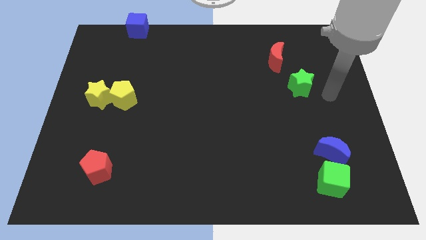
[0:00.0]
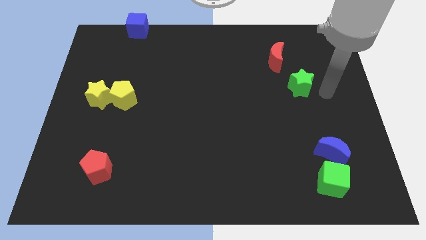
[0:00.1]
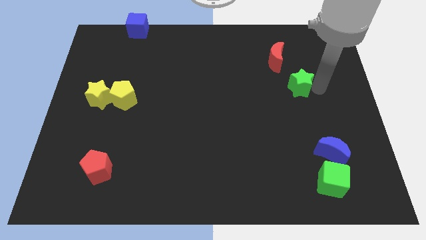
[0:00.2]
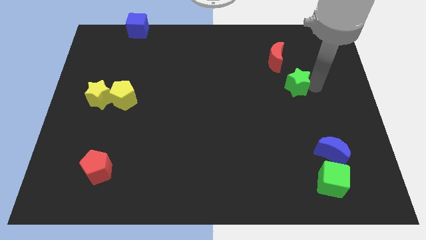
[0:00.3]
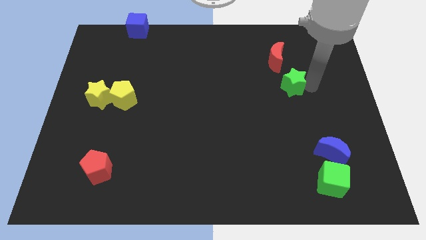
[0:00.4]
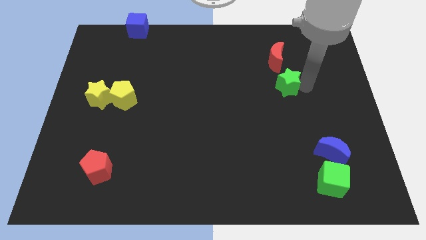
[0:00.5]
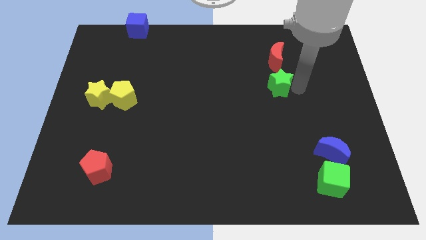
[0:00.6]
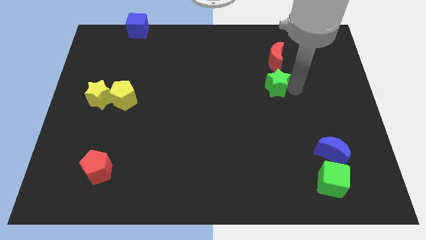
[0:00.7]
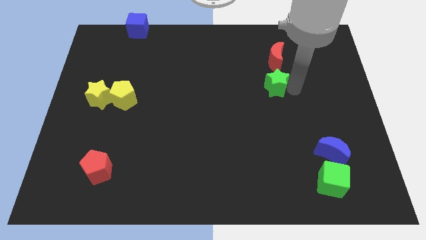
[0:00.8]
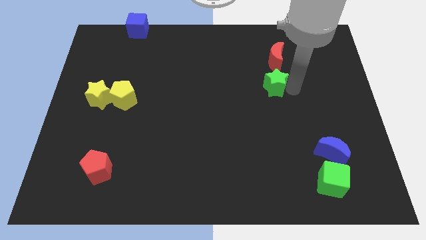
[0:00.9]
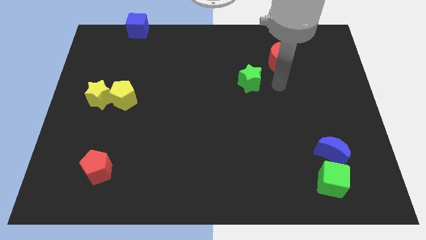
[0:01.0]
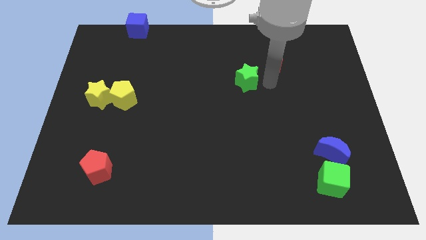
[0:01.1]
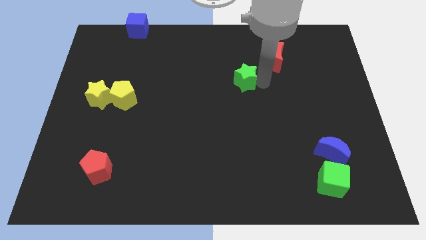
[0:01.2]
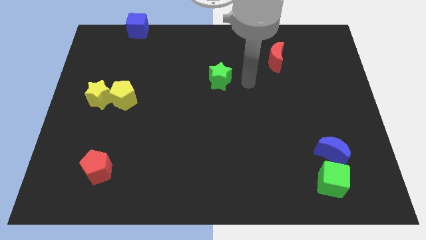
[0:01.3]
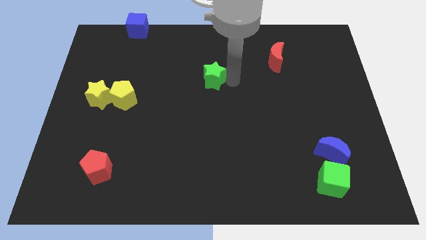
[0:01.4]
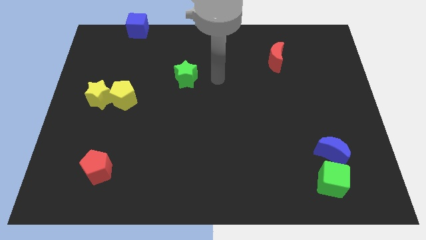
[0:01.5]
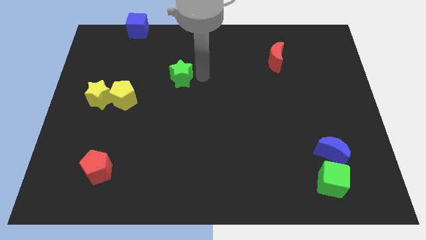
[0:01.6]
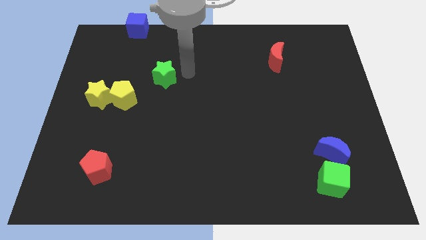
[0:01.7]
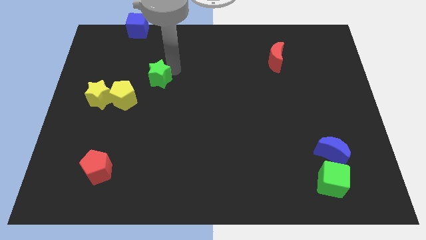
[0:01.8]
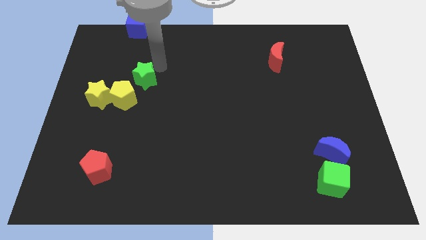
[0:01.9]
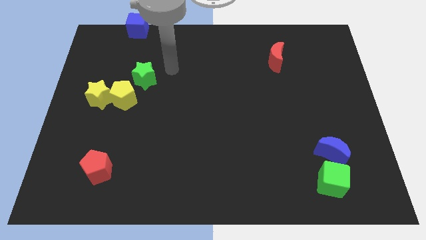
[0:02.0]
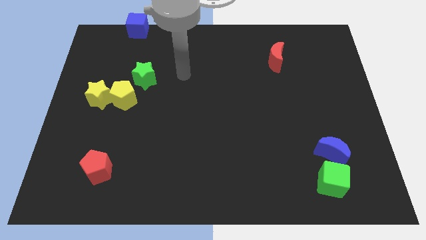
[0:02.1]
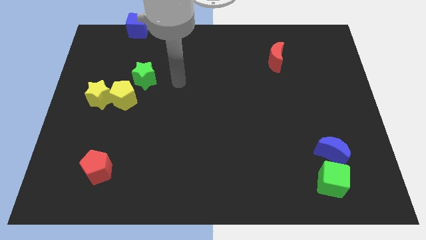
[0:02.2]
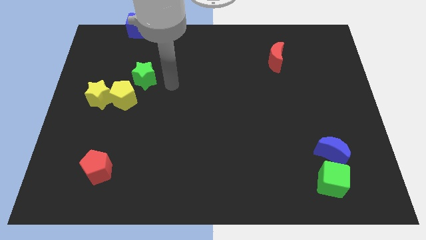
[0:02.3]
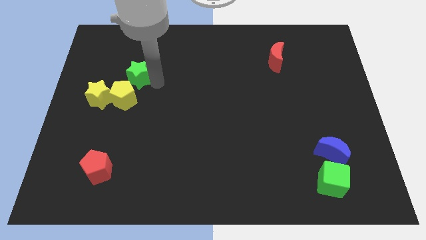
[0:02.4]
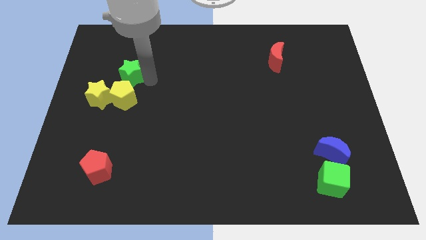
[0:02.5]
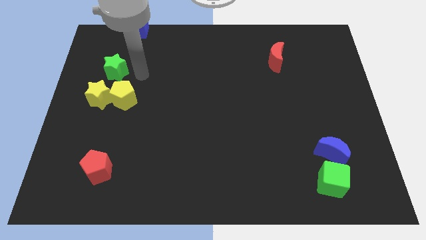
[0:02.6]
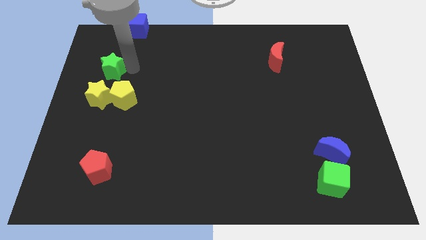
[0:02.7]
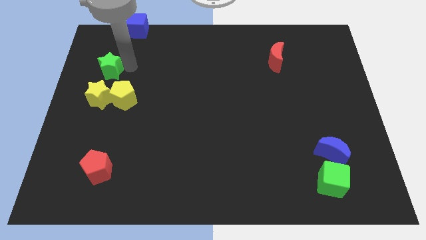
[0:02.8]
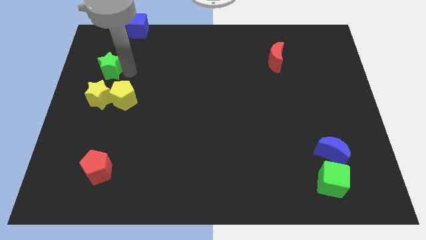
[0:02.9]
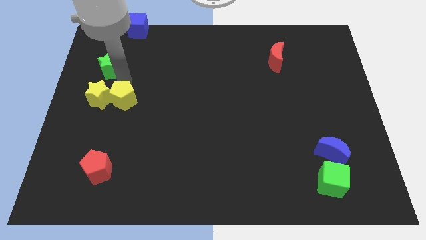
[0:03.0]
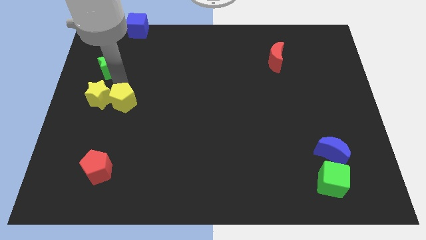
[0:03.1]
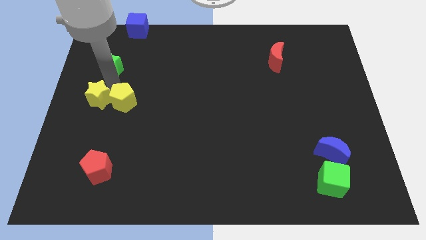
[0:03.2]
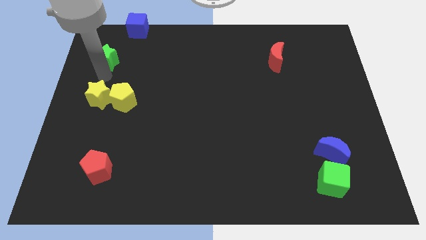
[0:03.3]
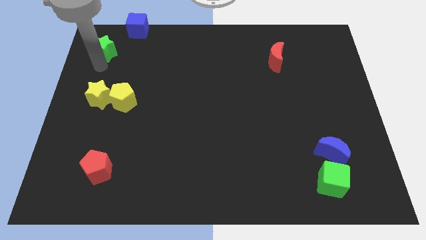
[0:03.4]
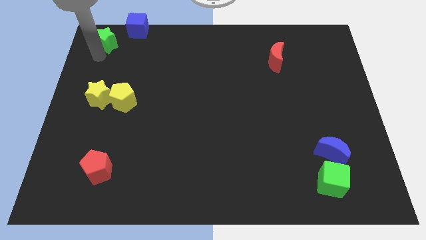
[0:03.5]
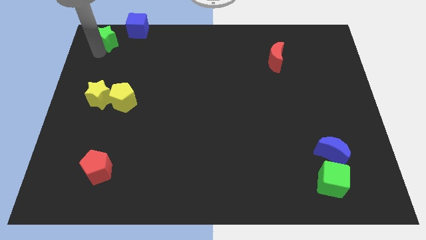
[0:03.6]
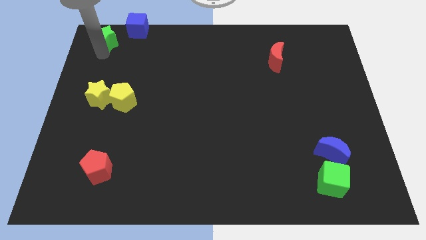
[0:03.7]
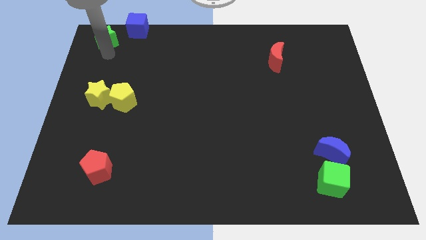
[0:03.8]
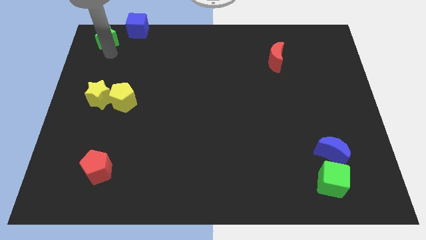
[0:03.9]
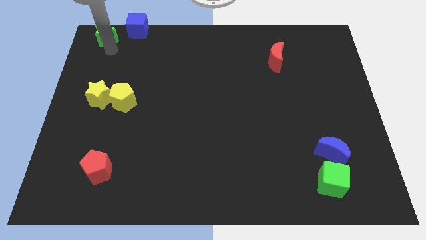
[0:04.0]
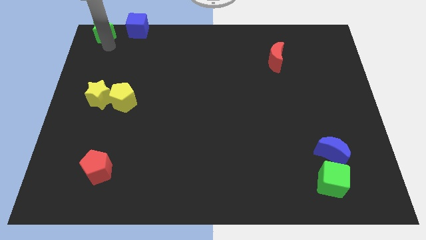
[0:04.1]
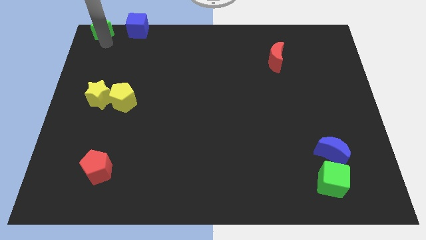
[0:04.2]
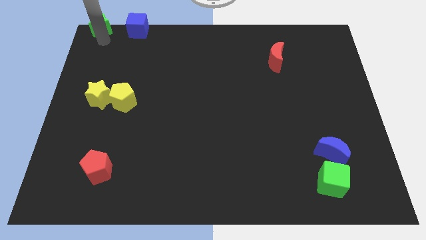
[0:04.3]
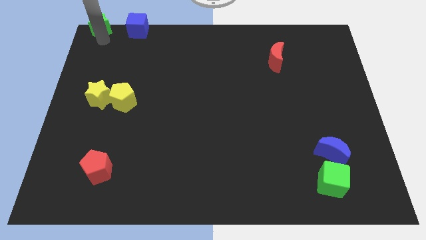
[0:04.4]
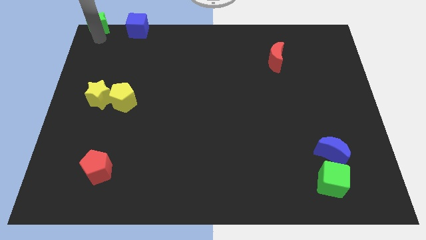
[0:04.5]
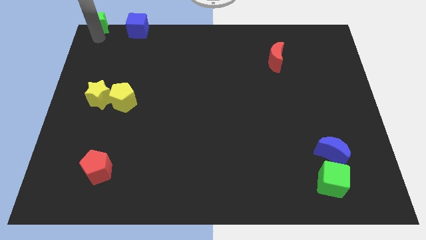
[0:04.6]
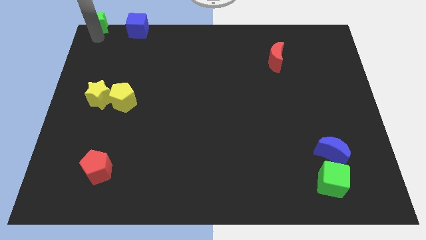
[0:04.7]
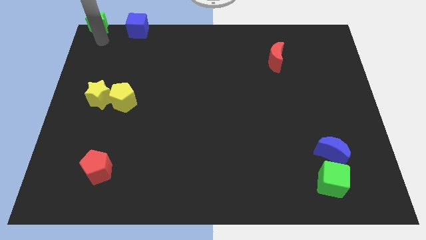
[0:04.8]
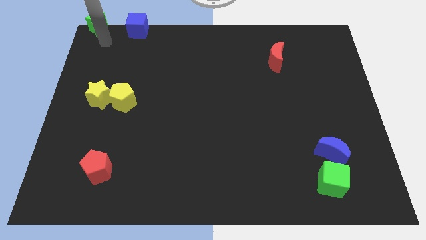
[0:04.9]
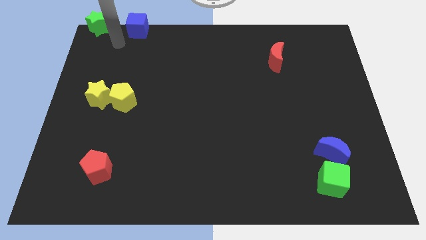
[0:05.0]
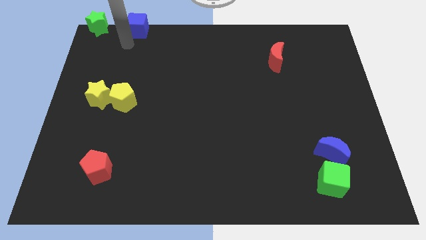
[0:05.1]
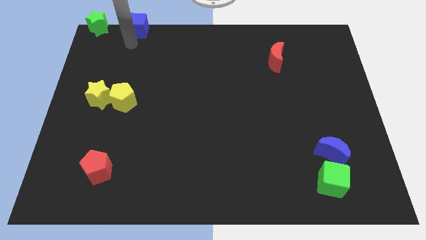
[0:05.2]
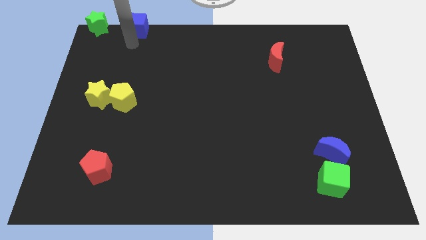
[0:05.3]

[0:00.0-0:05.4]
move the green star left to the blue cube

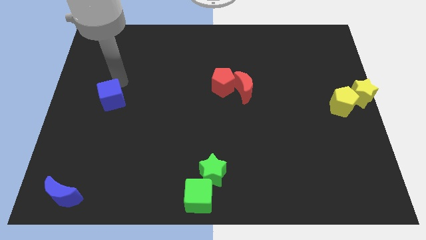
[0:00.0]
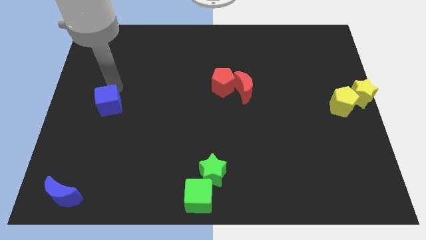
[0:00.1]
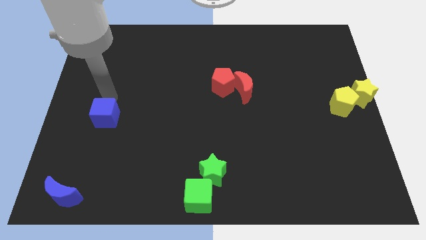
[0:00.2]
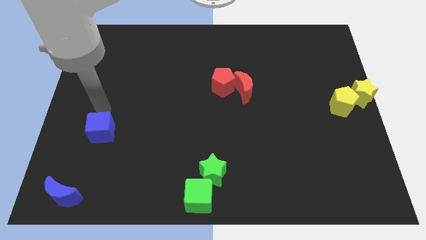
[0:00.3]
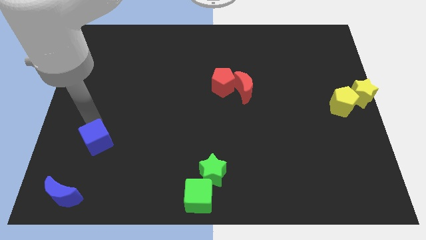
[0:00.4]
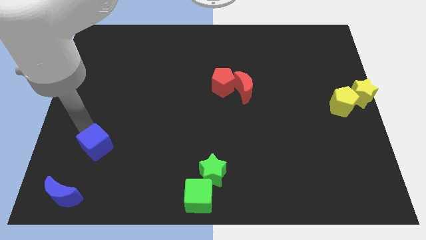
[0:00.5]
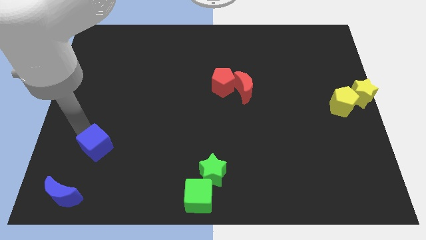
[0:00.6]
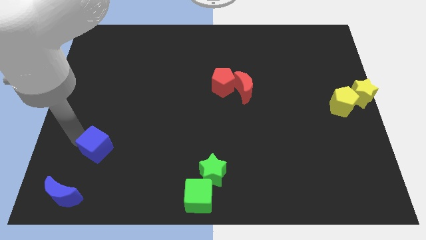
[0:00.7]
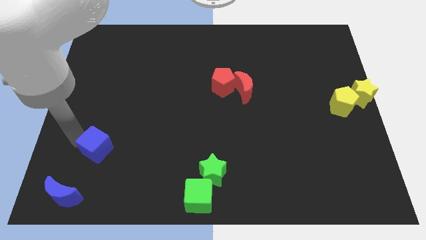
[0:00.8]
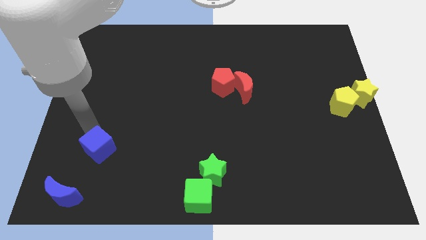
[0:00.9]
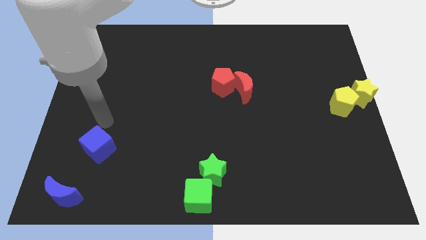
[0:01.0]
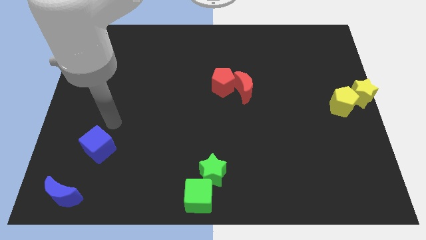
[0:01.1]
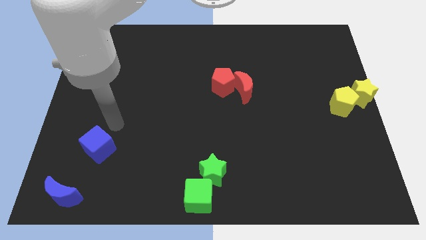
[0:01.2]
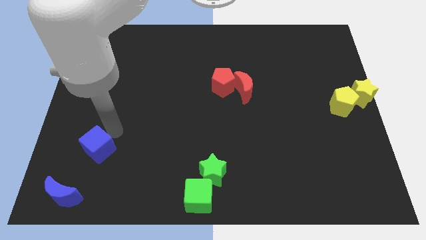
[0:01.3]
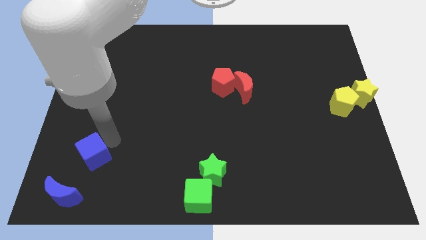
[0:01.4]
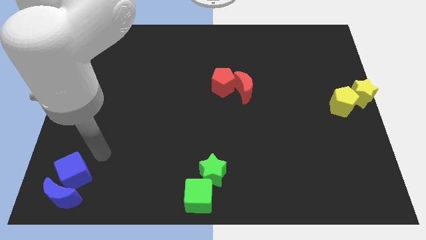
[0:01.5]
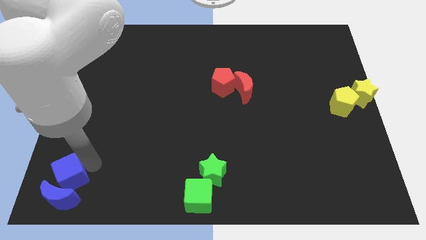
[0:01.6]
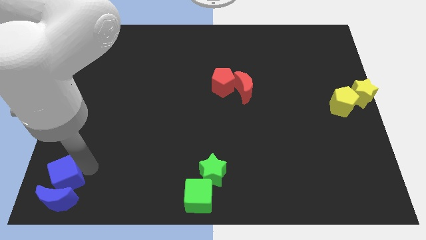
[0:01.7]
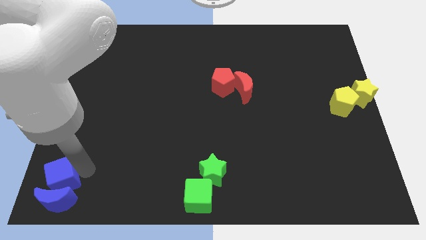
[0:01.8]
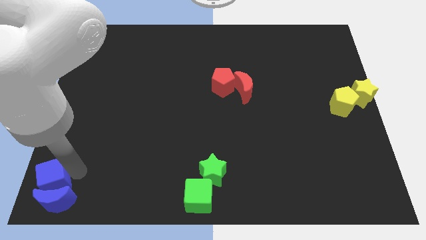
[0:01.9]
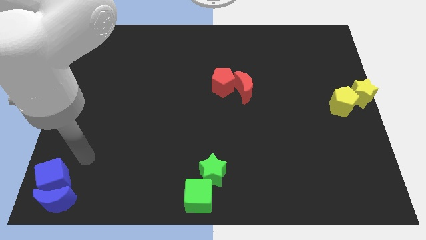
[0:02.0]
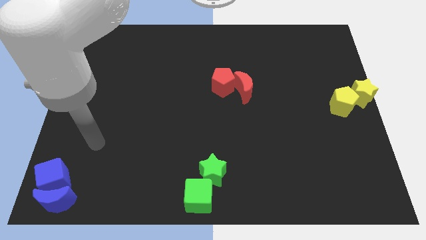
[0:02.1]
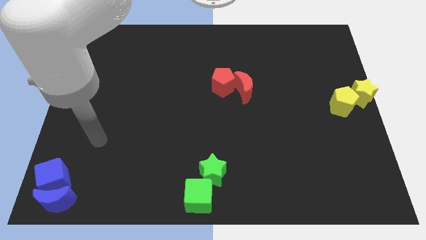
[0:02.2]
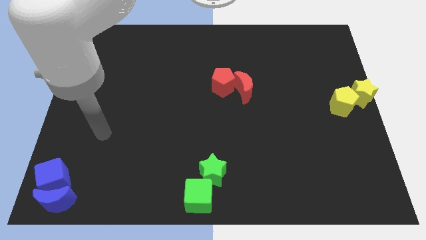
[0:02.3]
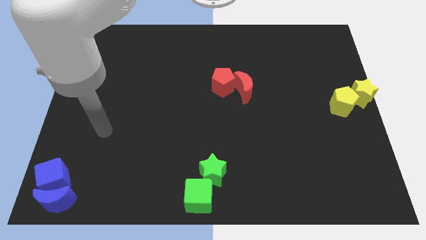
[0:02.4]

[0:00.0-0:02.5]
push the blue cube above the blue moon

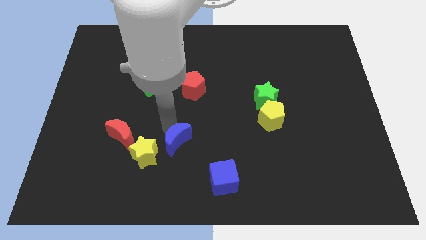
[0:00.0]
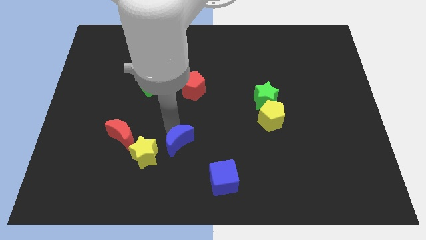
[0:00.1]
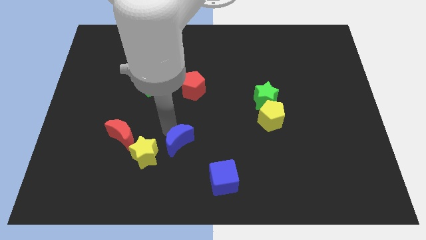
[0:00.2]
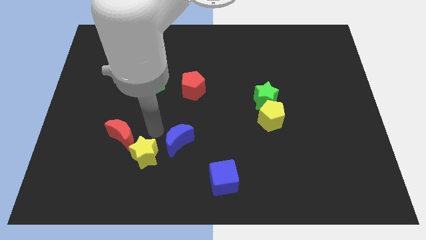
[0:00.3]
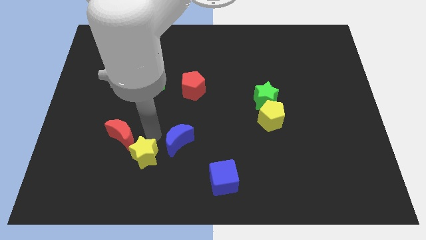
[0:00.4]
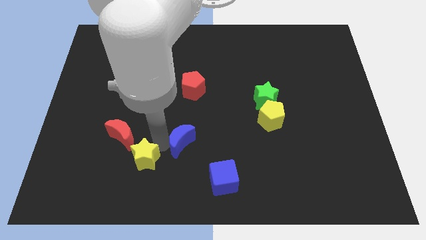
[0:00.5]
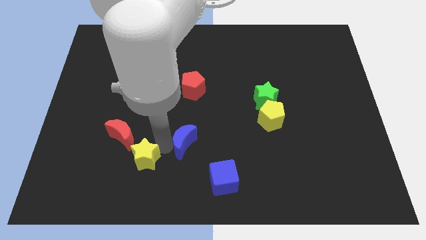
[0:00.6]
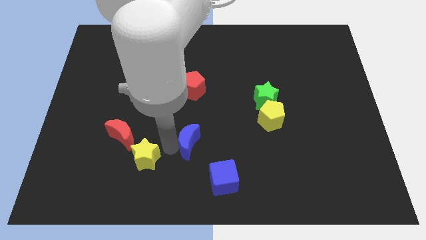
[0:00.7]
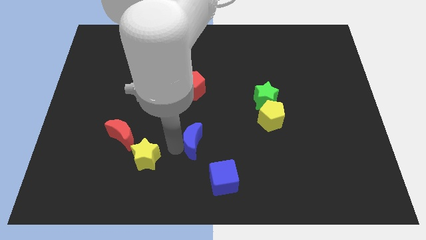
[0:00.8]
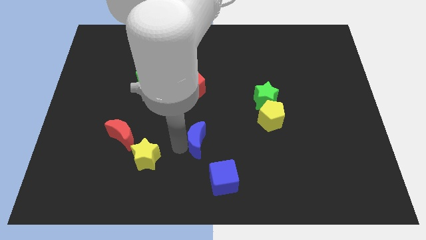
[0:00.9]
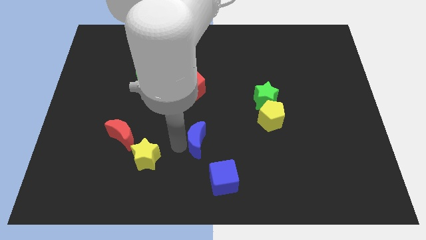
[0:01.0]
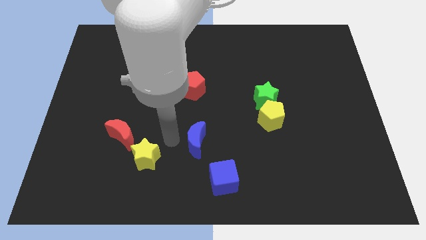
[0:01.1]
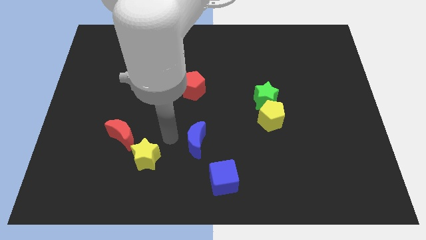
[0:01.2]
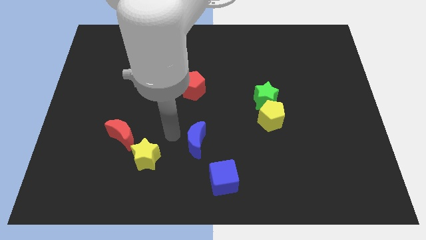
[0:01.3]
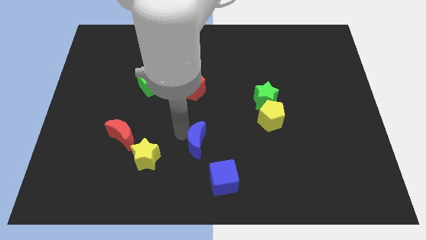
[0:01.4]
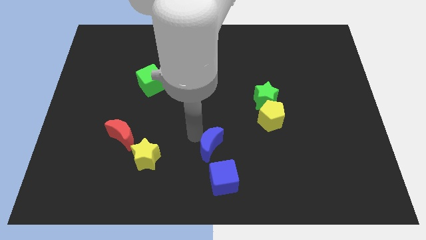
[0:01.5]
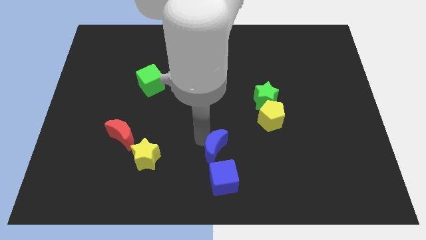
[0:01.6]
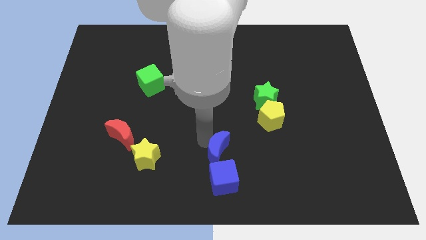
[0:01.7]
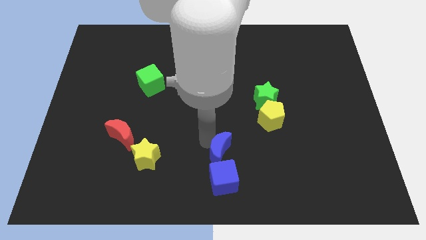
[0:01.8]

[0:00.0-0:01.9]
move the blue crescent to the top of the blue cube
